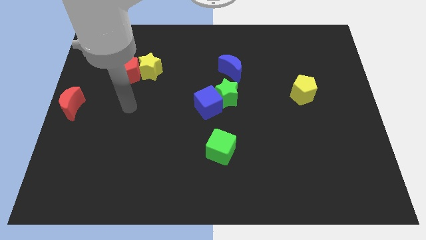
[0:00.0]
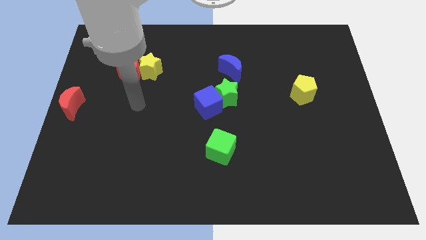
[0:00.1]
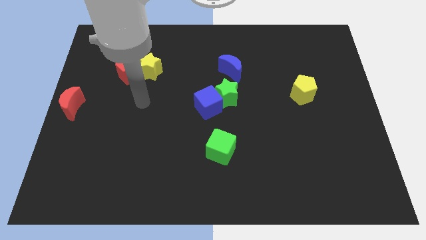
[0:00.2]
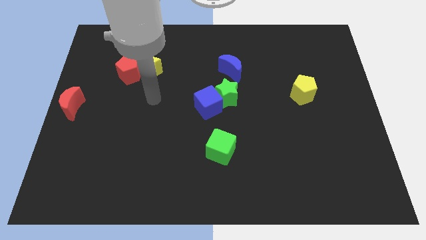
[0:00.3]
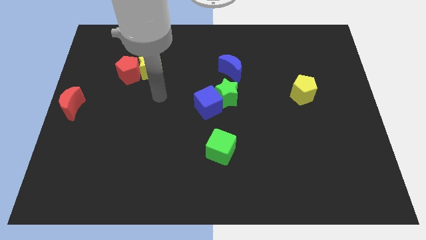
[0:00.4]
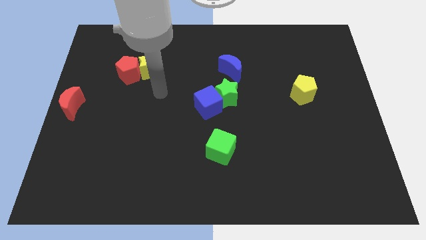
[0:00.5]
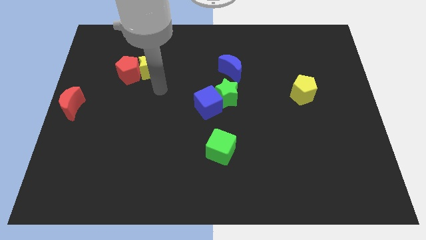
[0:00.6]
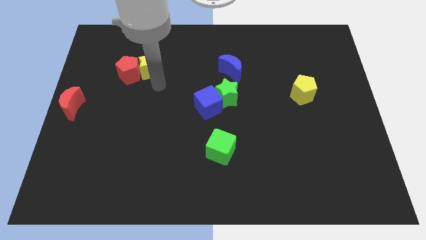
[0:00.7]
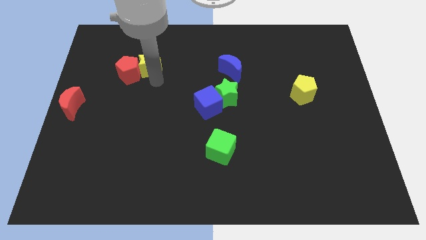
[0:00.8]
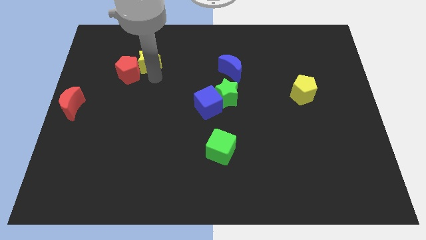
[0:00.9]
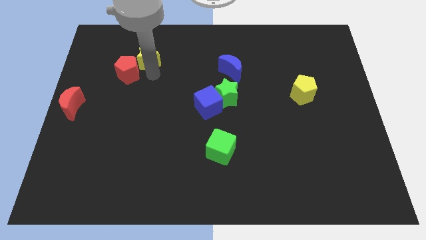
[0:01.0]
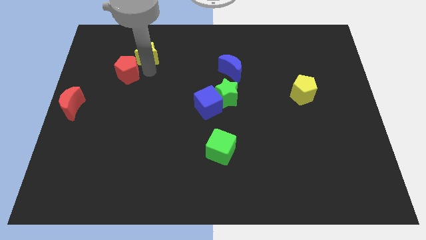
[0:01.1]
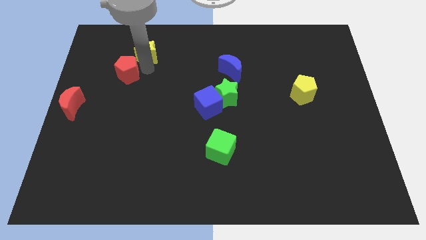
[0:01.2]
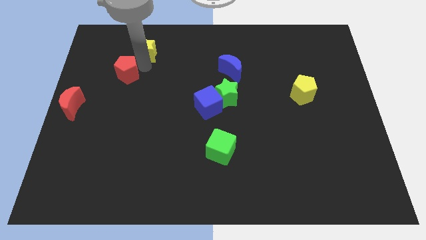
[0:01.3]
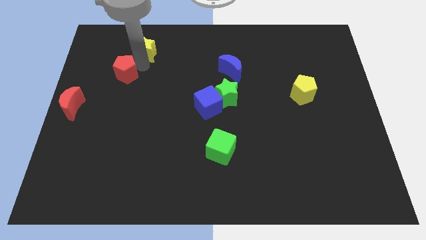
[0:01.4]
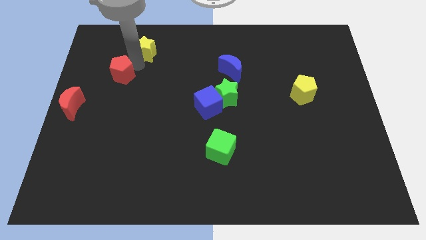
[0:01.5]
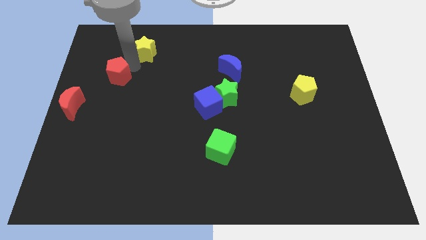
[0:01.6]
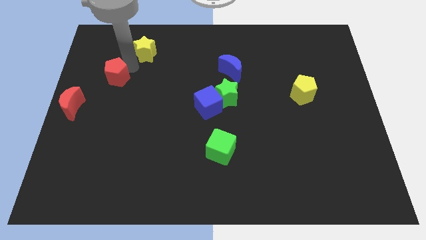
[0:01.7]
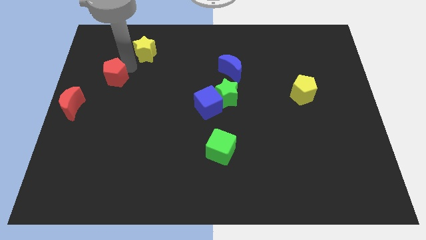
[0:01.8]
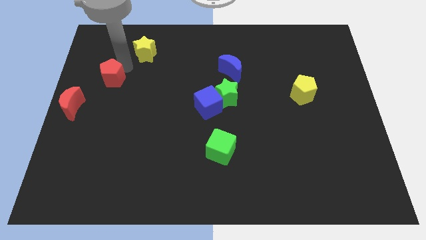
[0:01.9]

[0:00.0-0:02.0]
separate yellow star and the red pentagon

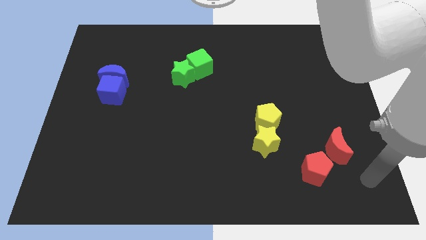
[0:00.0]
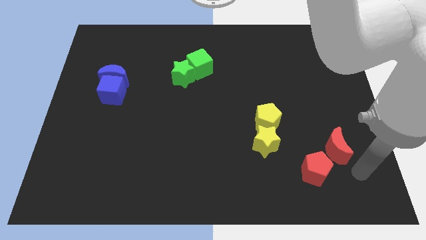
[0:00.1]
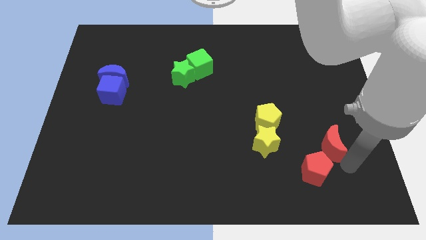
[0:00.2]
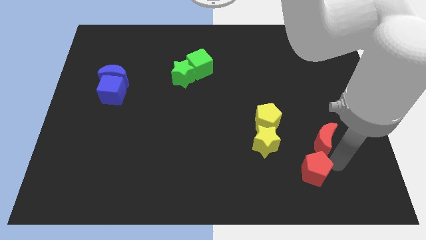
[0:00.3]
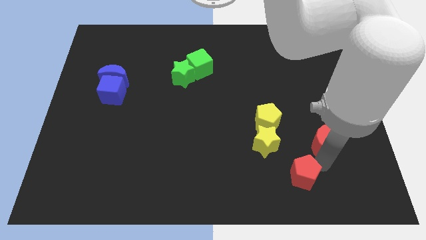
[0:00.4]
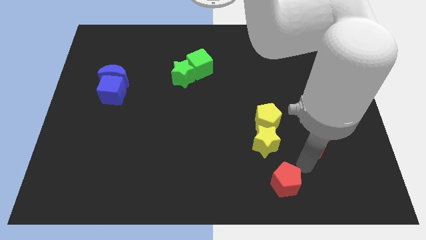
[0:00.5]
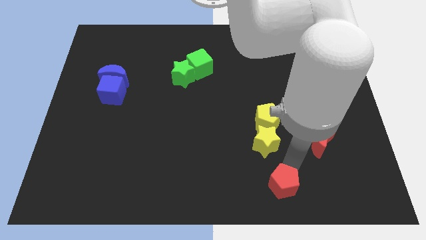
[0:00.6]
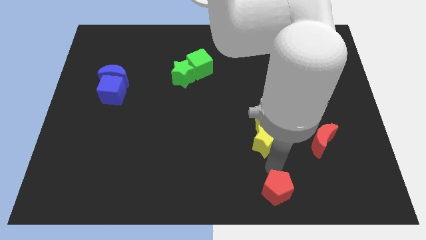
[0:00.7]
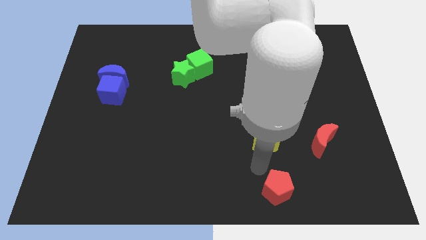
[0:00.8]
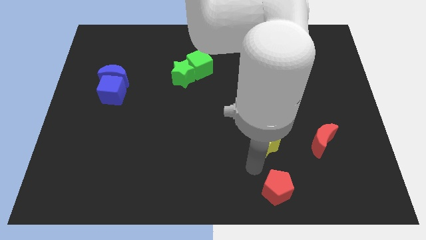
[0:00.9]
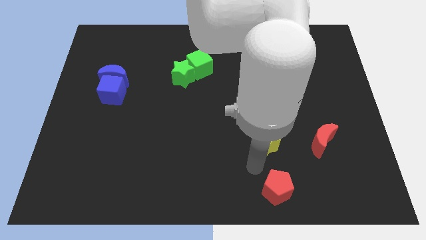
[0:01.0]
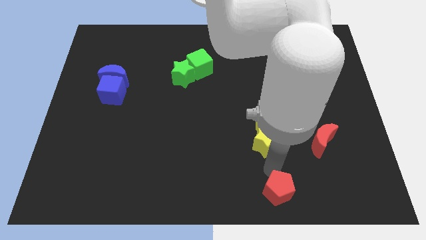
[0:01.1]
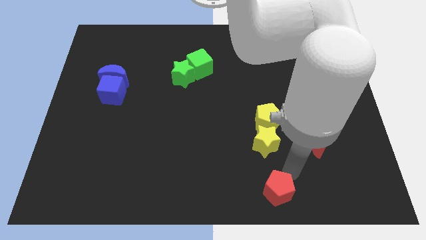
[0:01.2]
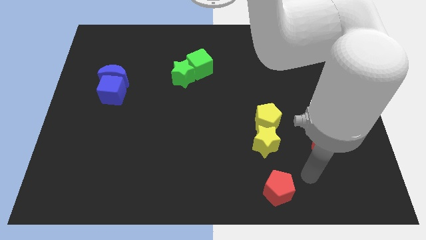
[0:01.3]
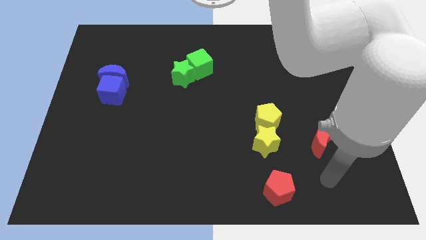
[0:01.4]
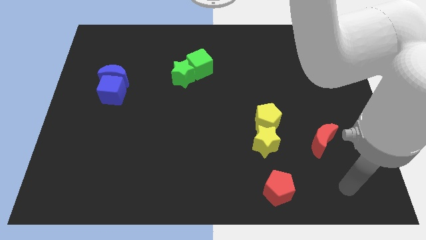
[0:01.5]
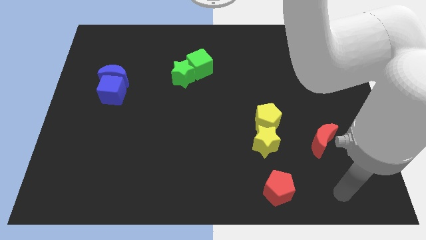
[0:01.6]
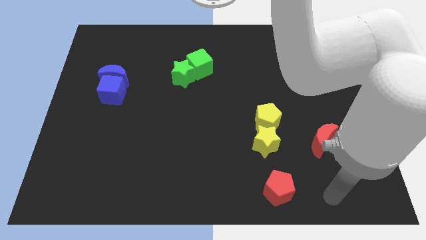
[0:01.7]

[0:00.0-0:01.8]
put the red pentagon vertically below the yellow star

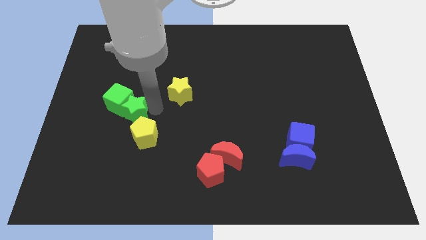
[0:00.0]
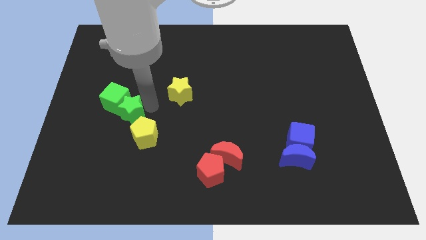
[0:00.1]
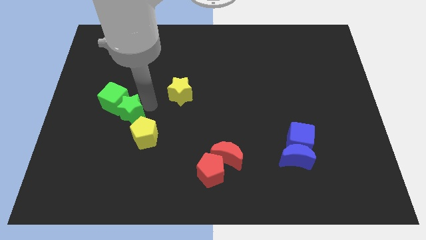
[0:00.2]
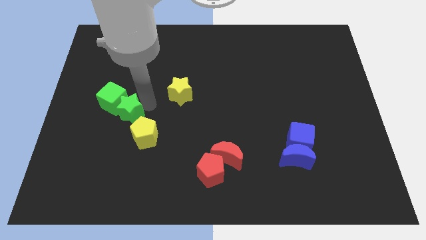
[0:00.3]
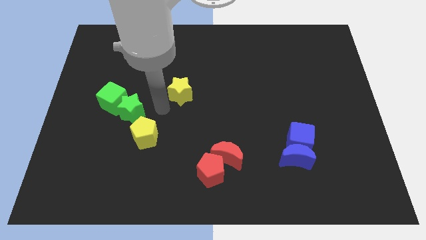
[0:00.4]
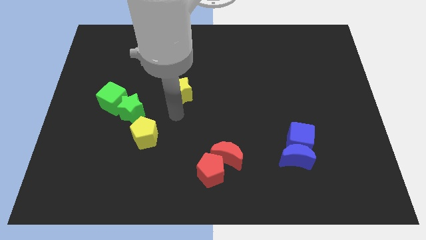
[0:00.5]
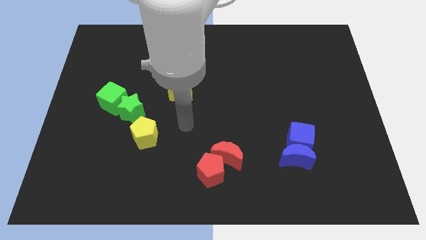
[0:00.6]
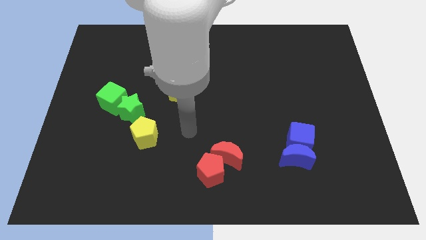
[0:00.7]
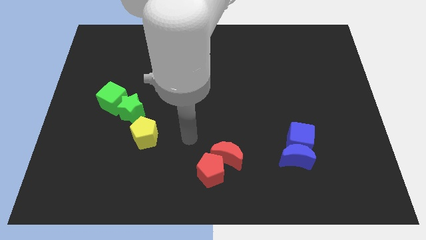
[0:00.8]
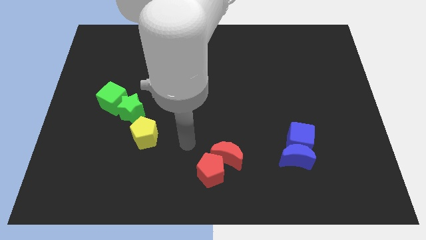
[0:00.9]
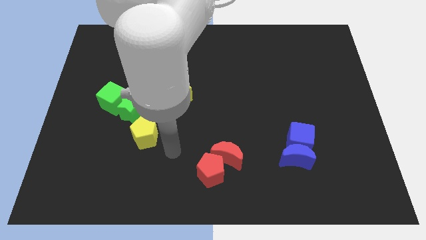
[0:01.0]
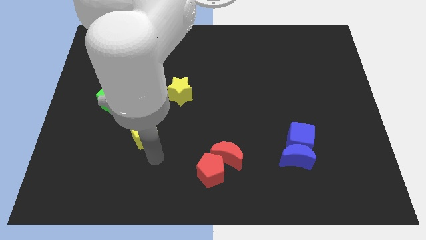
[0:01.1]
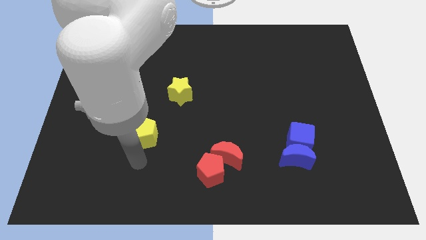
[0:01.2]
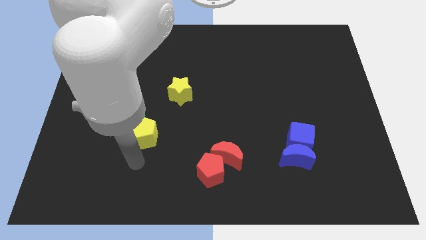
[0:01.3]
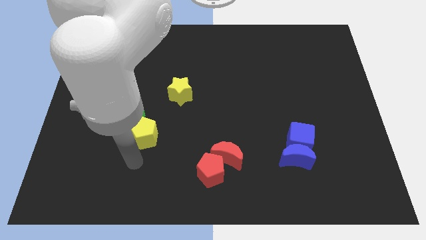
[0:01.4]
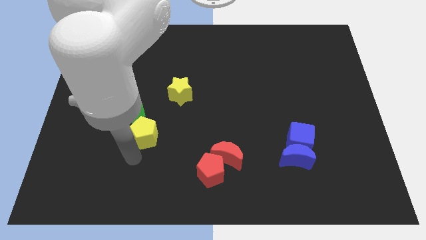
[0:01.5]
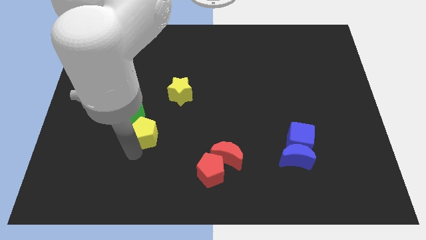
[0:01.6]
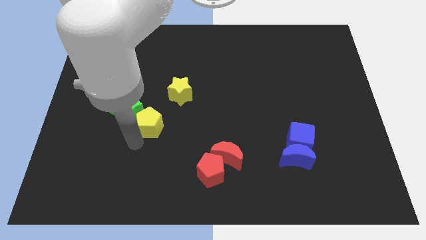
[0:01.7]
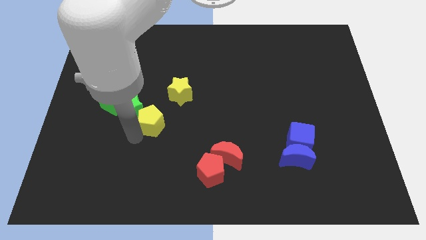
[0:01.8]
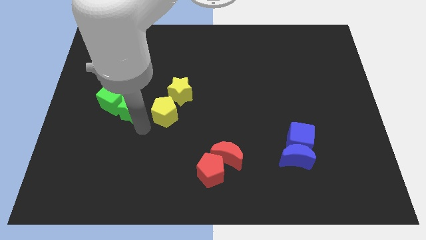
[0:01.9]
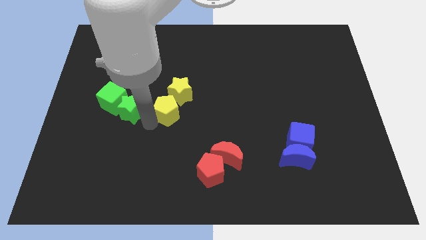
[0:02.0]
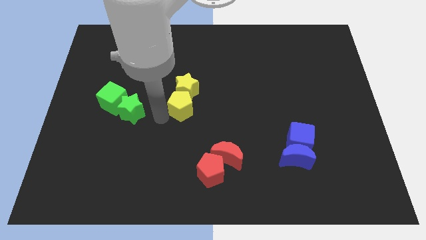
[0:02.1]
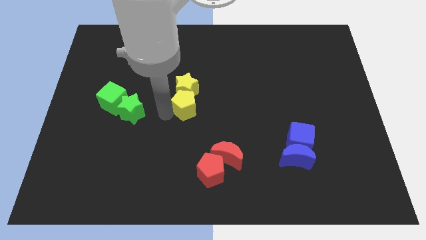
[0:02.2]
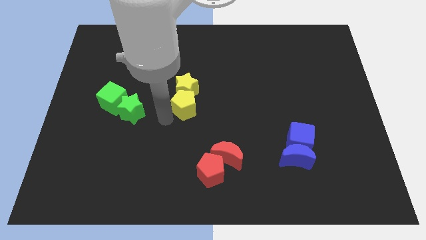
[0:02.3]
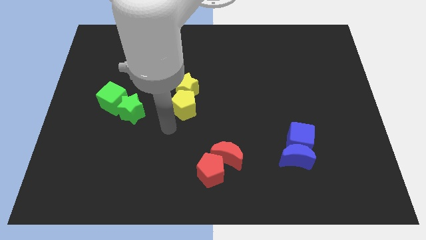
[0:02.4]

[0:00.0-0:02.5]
place the yellow pentagon down to the yellow star

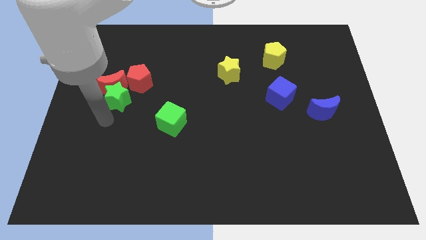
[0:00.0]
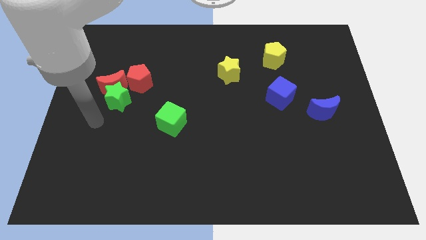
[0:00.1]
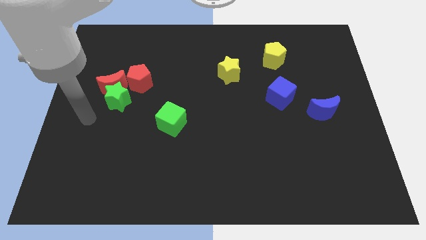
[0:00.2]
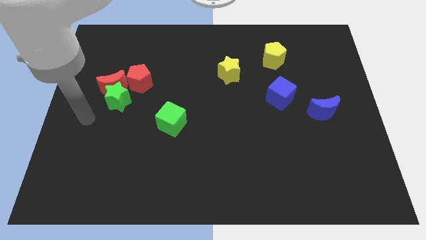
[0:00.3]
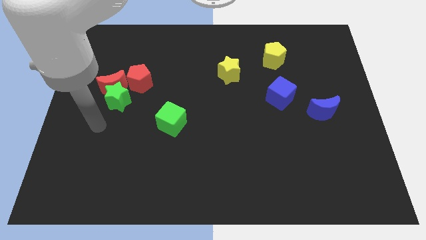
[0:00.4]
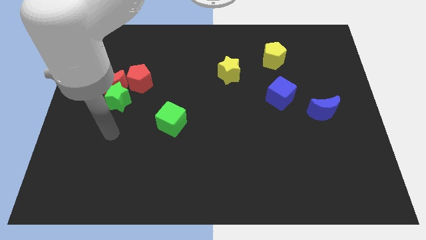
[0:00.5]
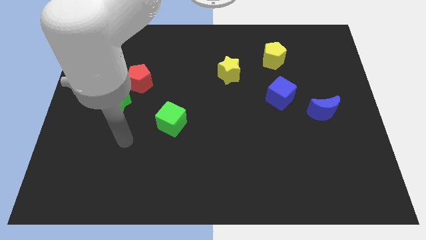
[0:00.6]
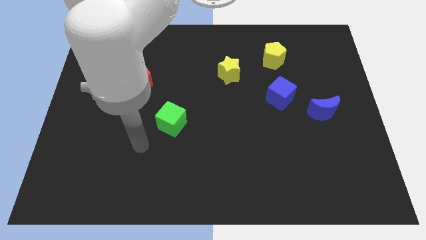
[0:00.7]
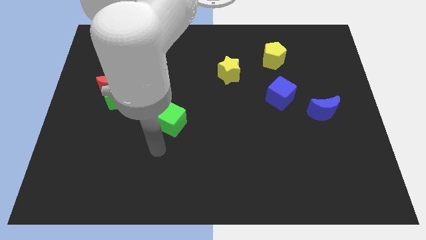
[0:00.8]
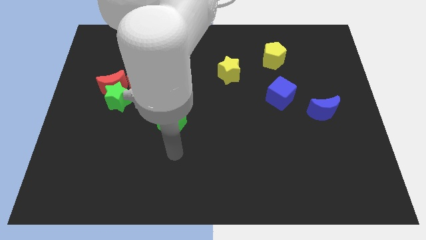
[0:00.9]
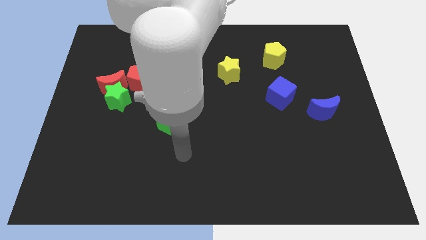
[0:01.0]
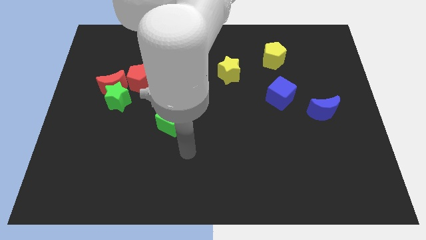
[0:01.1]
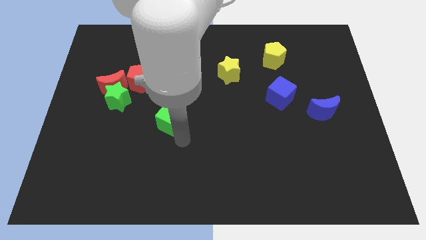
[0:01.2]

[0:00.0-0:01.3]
place your arm from the green star to the bottom of green cube

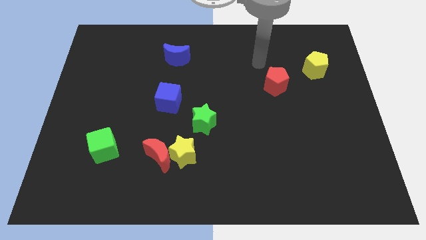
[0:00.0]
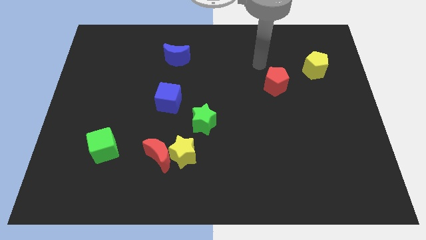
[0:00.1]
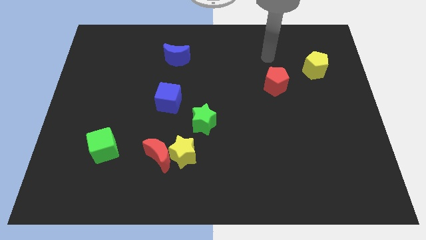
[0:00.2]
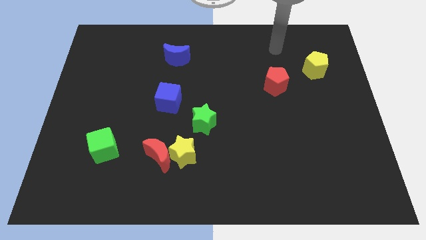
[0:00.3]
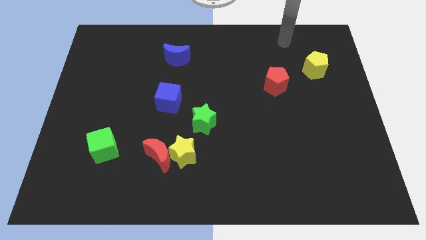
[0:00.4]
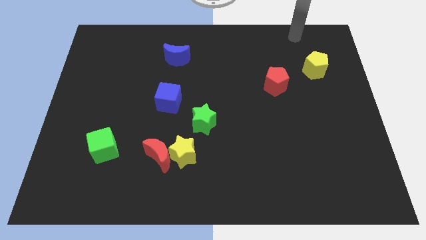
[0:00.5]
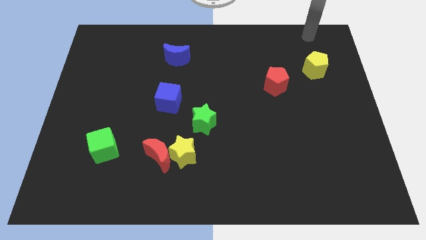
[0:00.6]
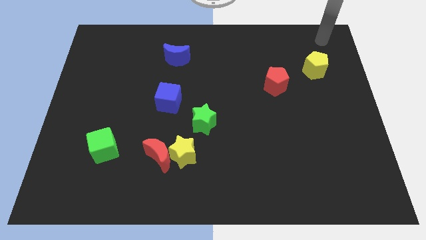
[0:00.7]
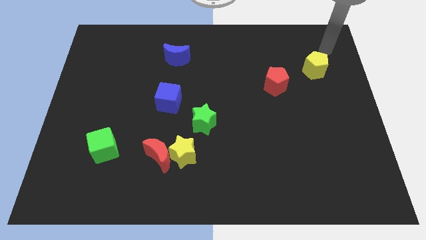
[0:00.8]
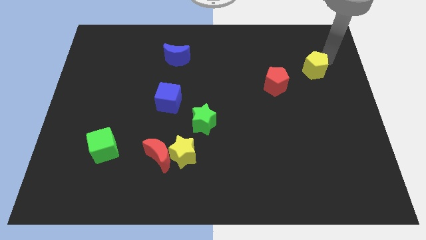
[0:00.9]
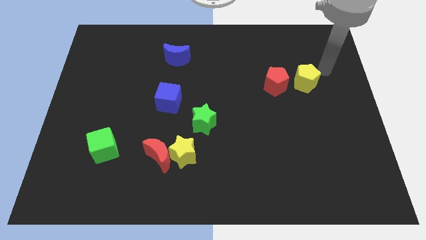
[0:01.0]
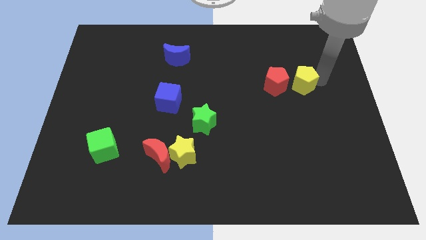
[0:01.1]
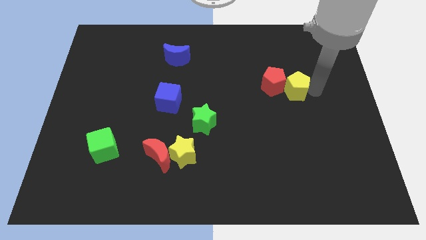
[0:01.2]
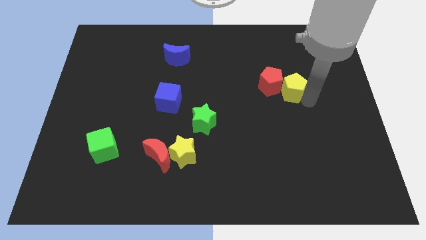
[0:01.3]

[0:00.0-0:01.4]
push the yellow pentagon into the right side of the red pentagon
